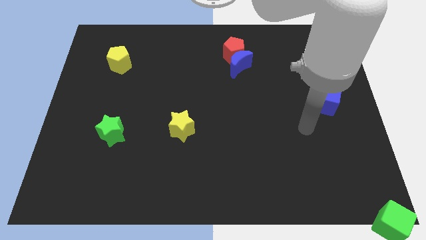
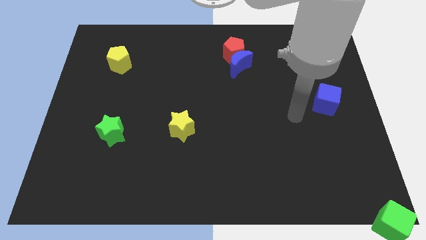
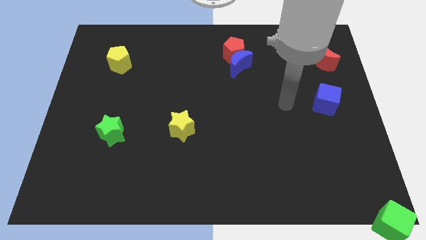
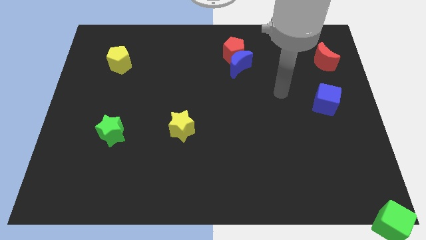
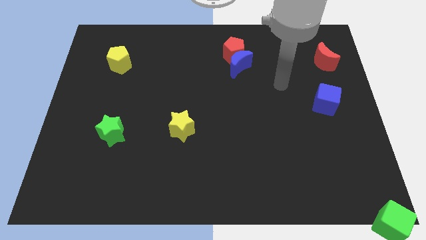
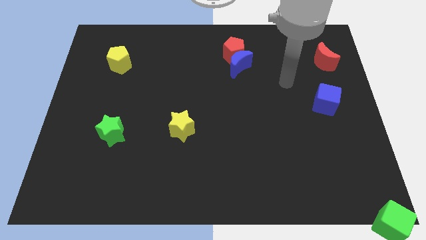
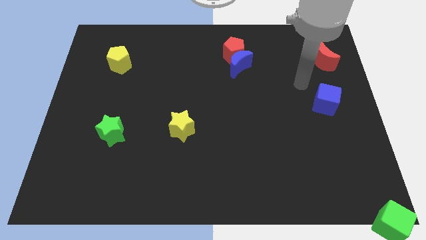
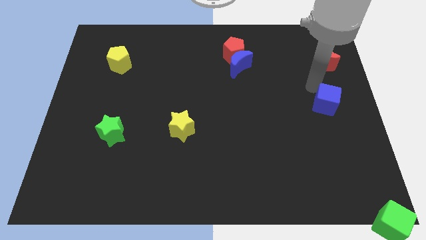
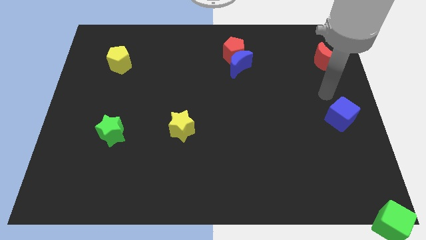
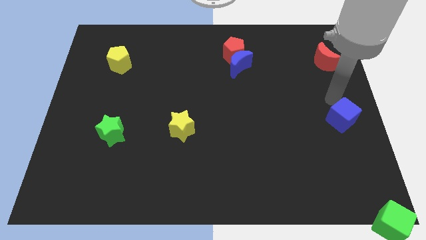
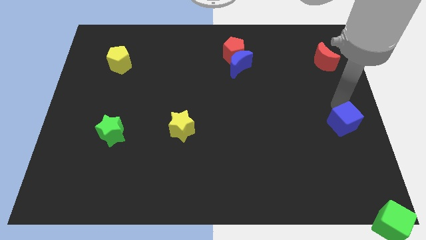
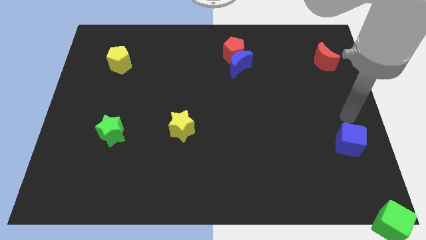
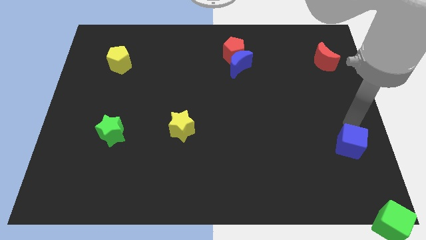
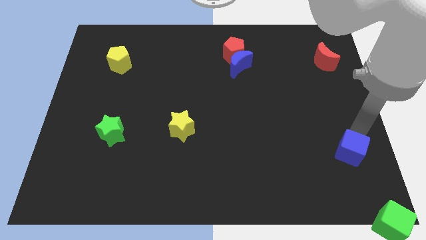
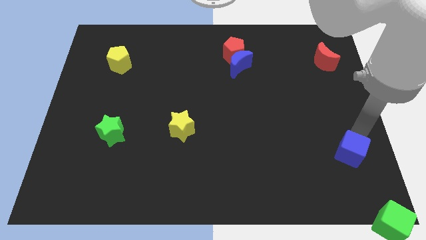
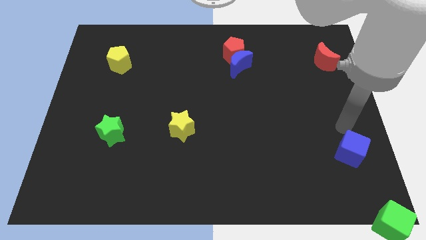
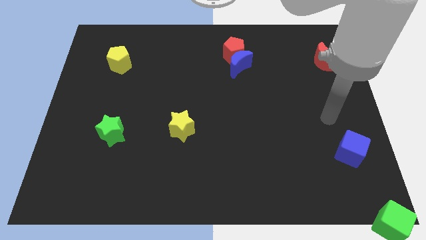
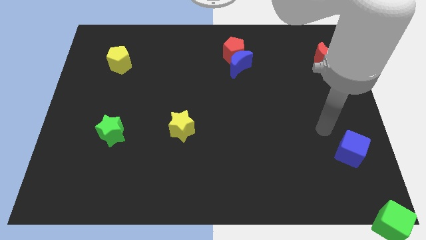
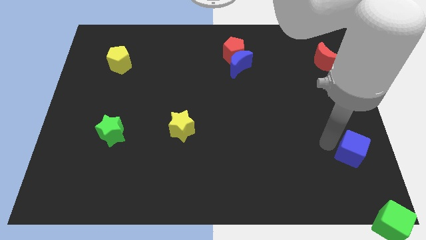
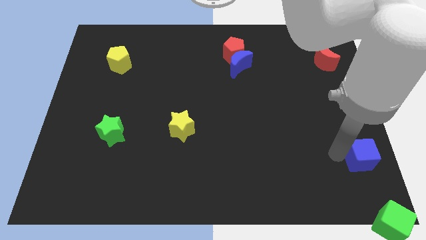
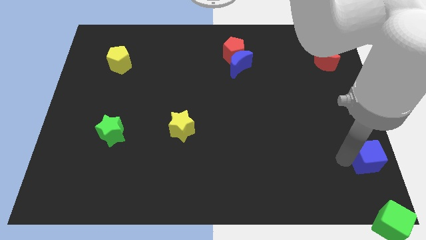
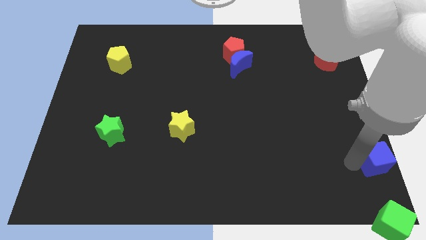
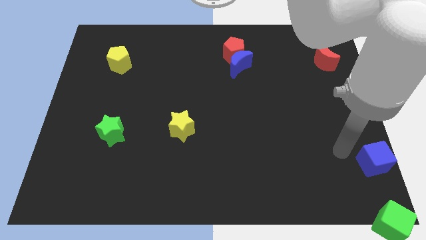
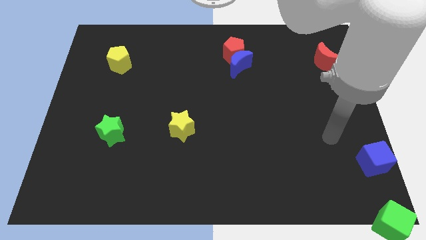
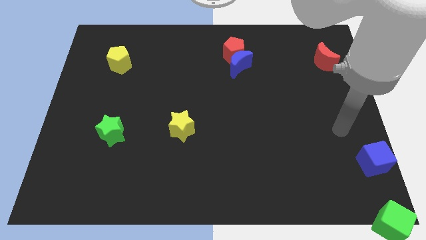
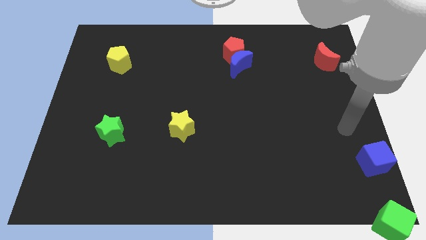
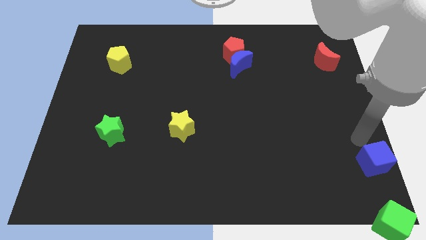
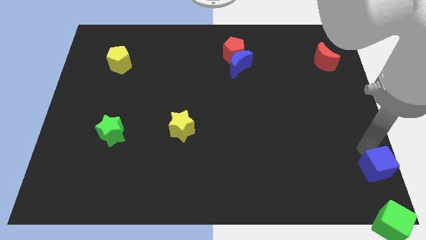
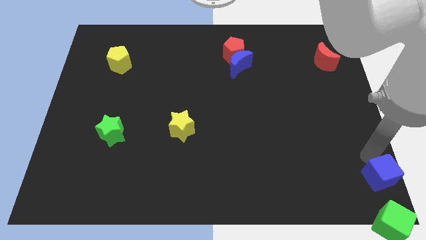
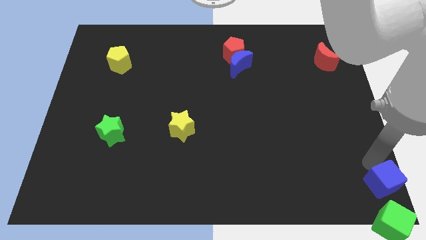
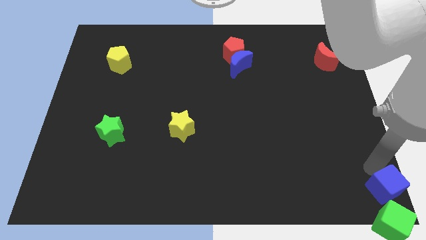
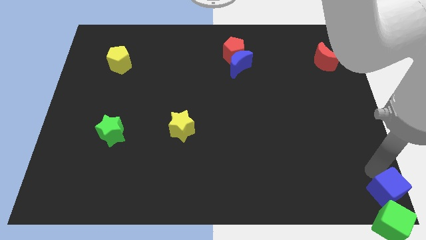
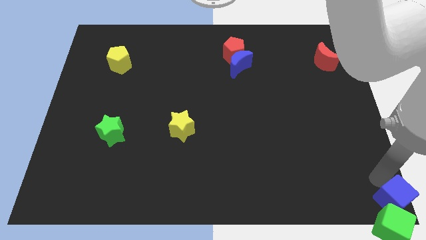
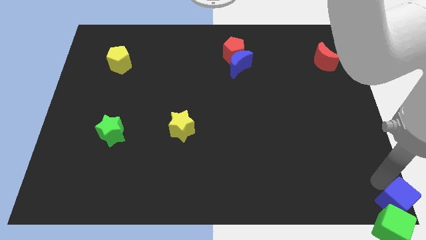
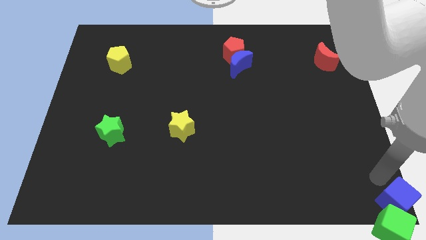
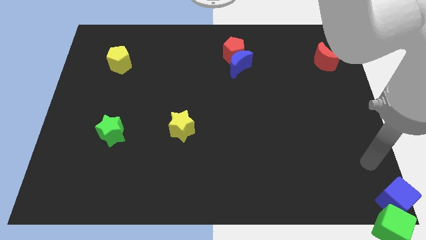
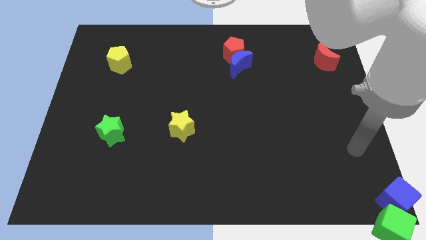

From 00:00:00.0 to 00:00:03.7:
push the blue cube into green cube

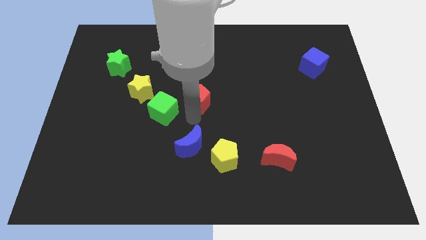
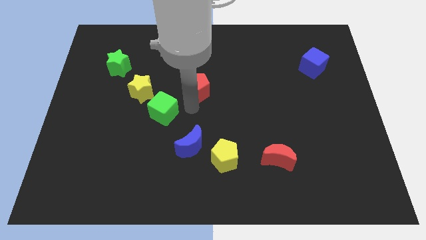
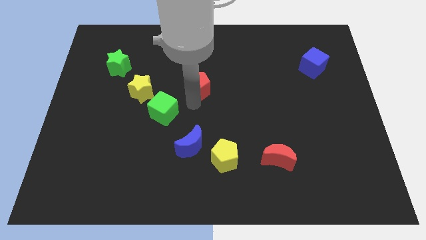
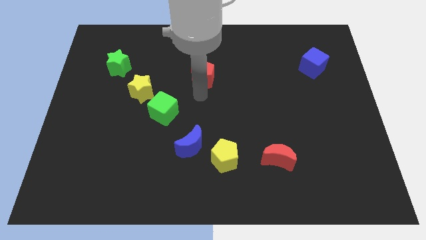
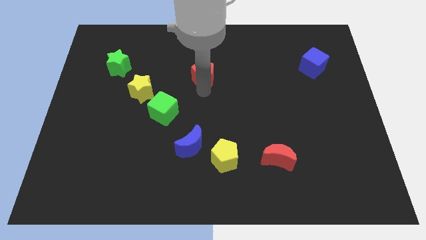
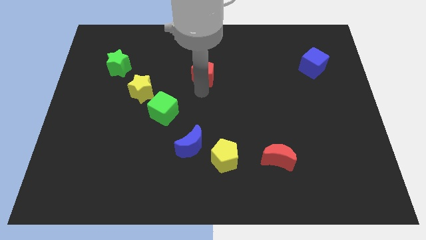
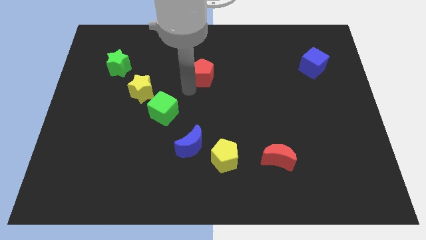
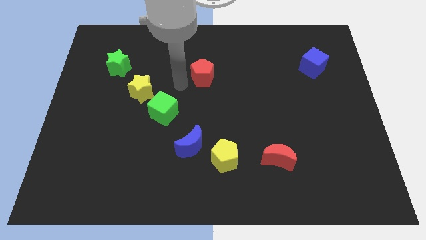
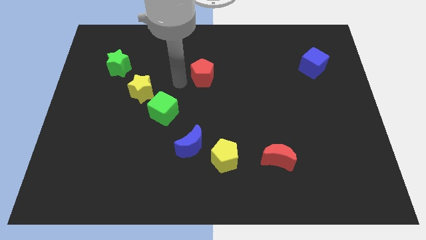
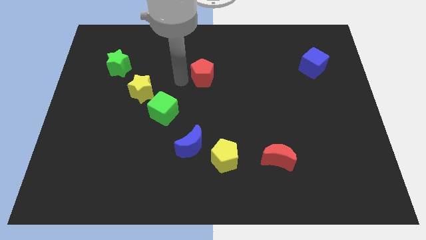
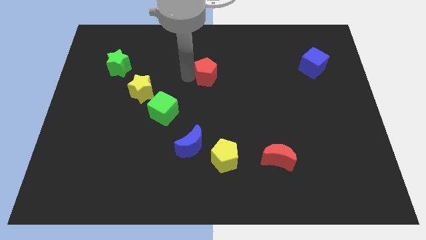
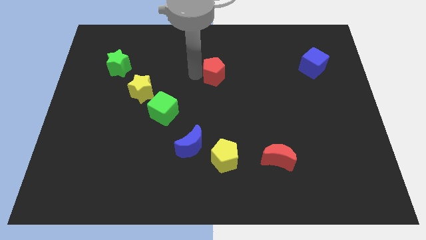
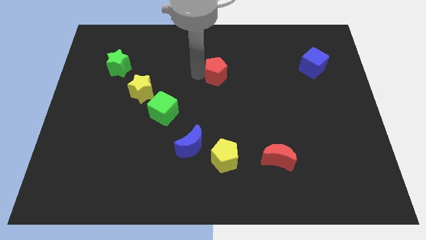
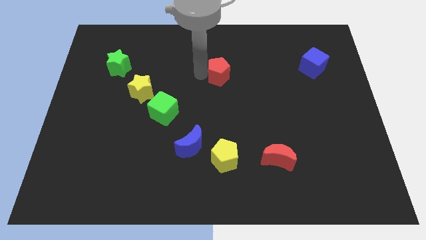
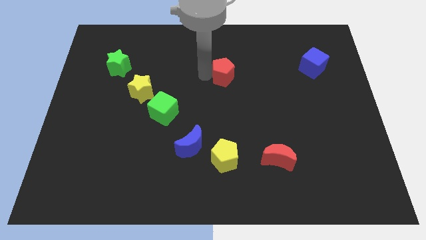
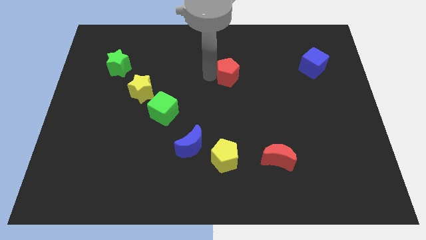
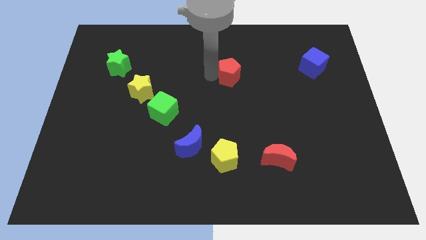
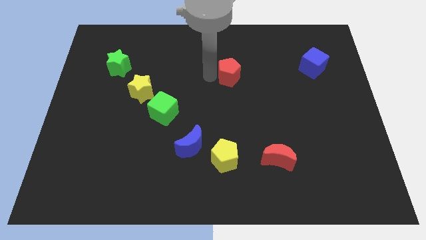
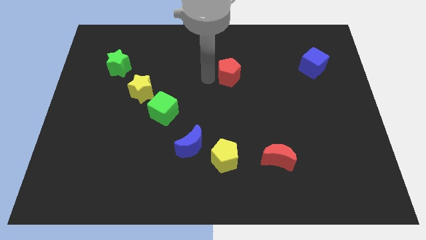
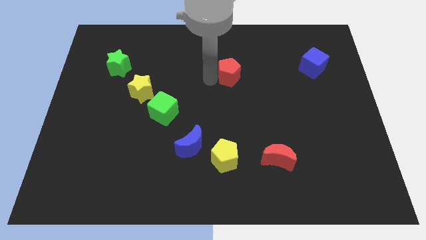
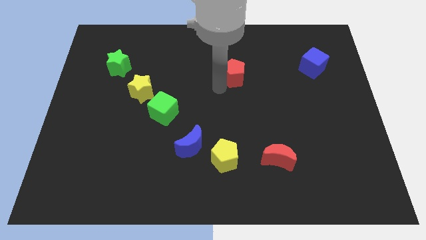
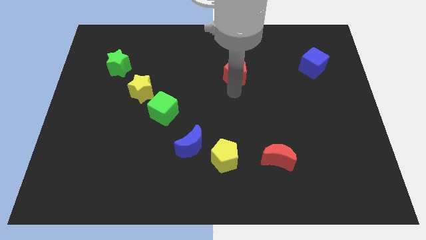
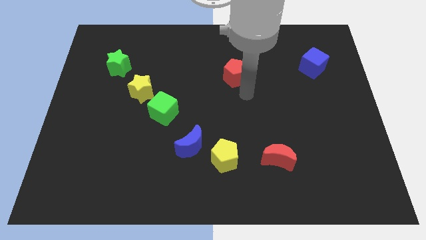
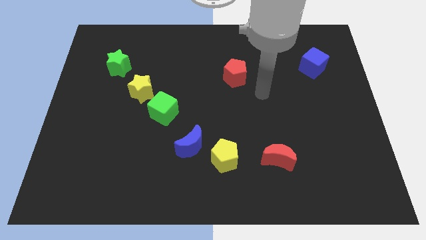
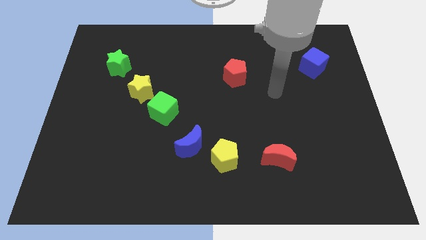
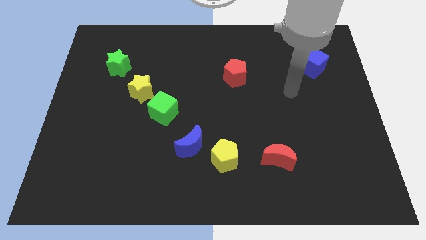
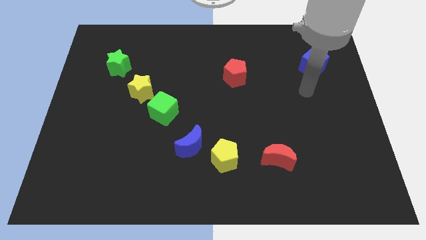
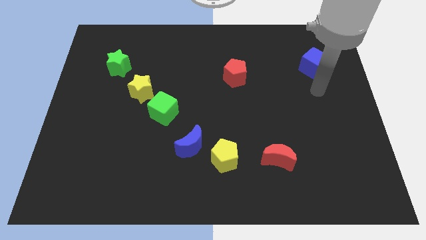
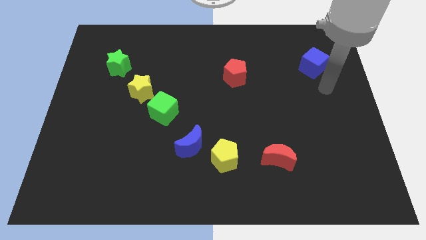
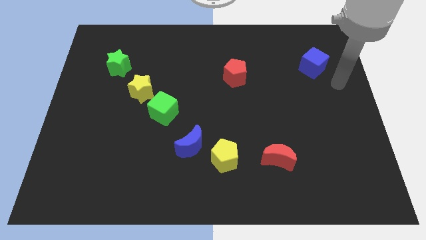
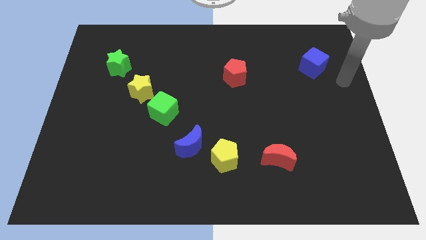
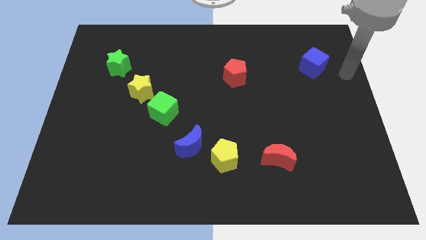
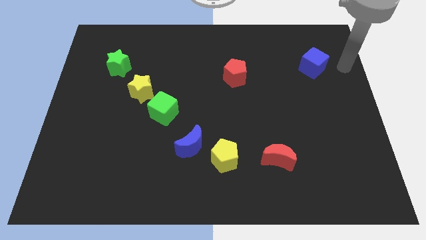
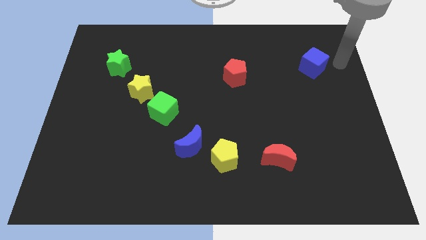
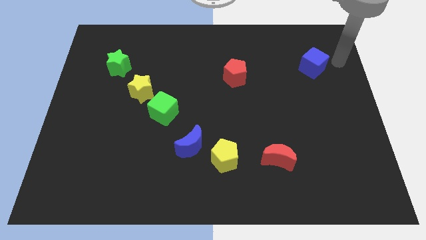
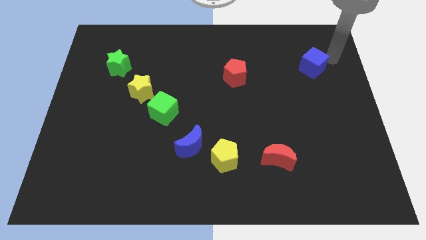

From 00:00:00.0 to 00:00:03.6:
move the red pentagon above the yellow pentagon

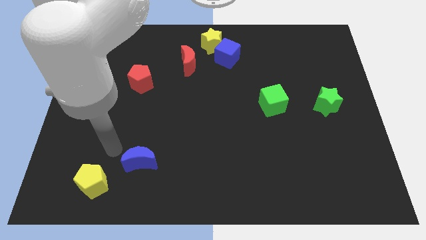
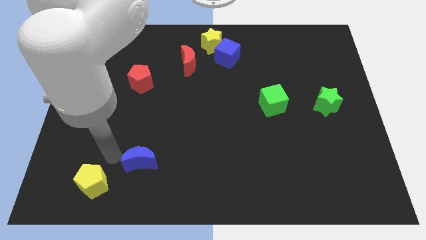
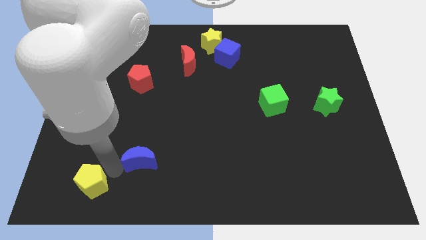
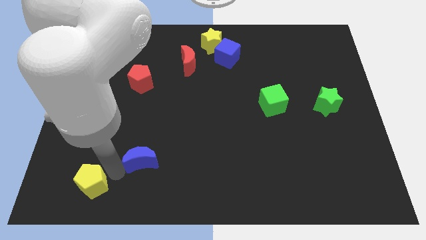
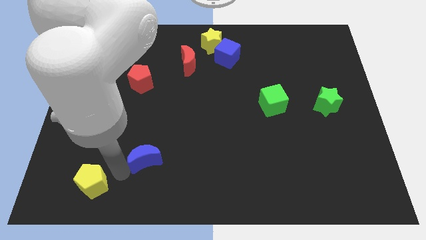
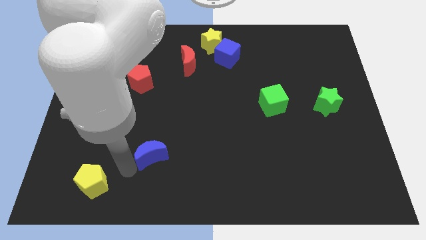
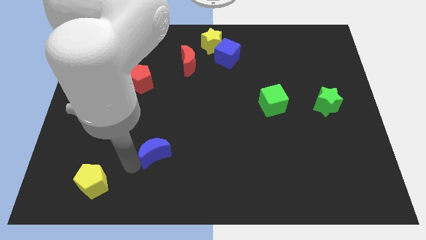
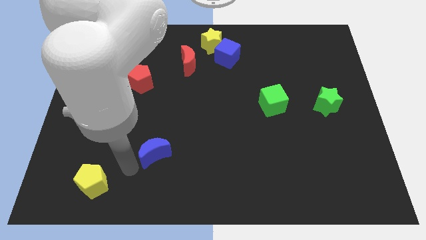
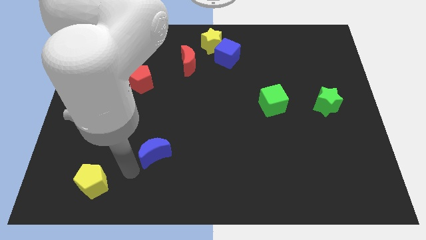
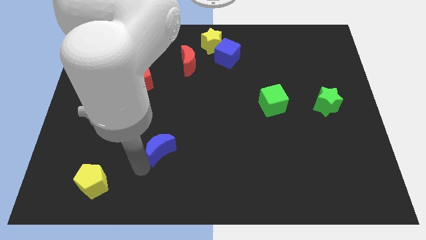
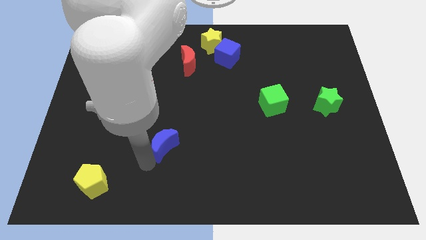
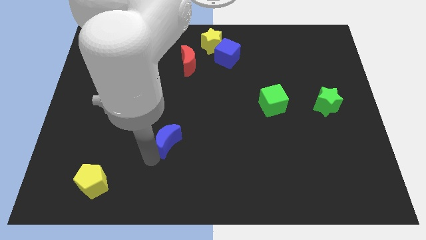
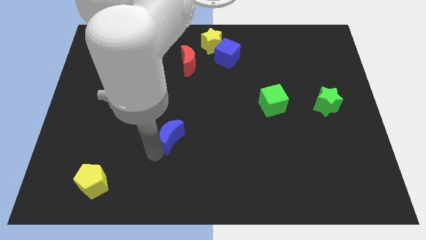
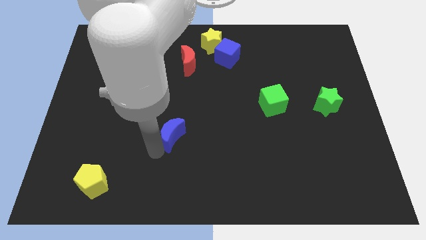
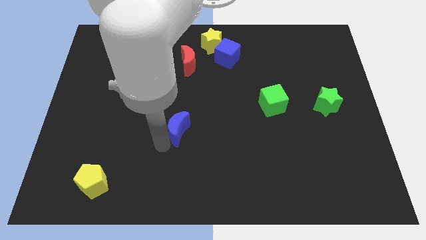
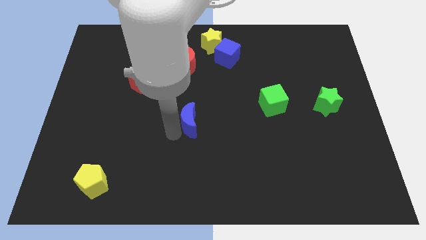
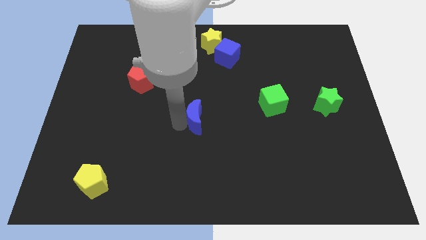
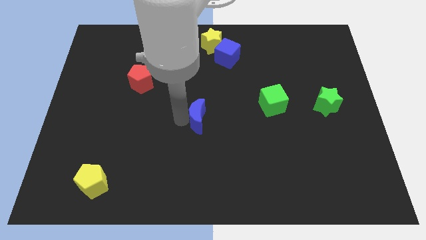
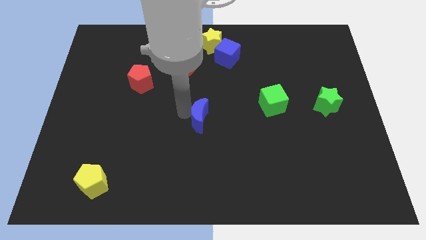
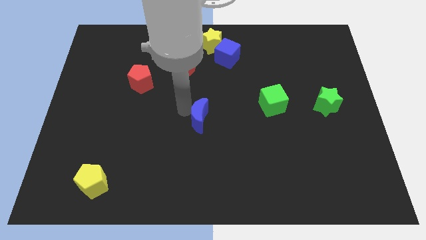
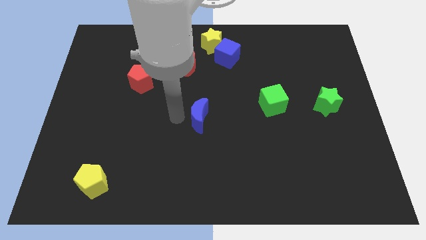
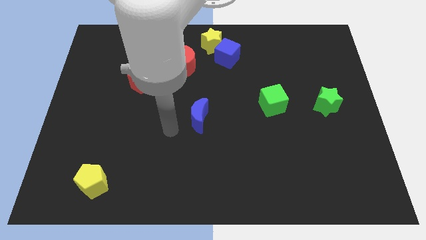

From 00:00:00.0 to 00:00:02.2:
move the blue crescent to the center of the board
